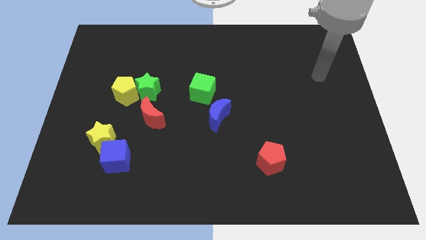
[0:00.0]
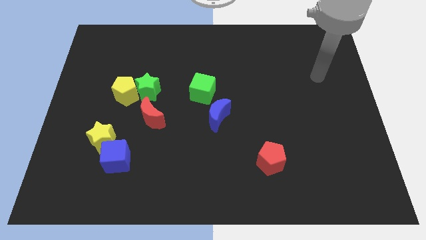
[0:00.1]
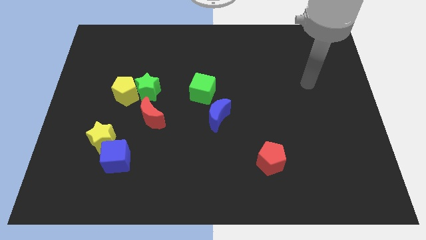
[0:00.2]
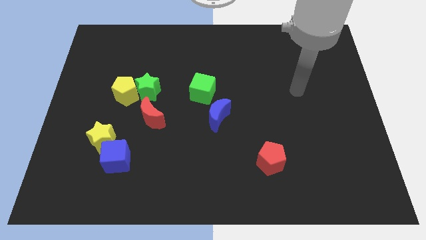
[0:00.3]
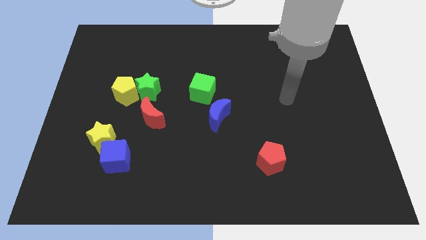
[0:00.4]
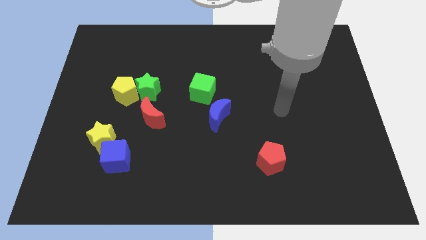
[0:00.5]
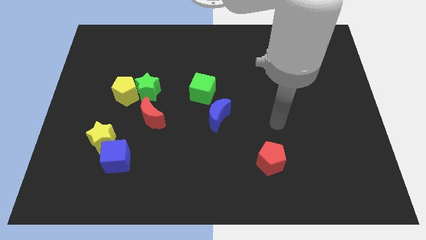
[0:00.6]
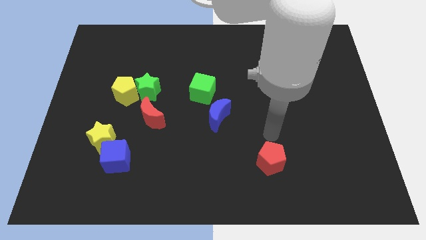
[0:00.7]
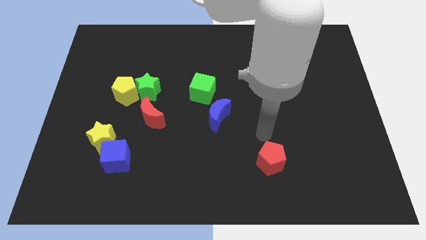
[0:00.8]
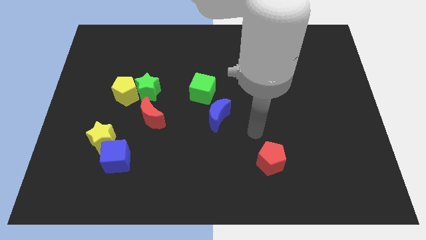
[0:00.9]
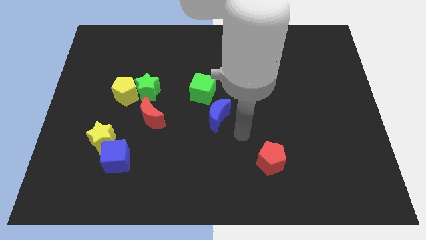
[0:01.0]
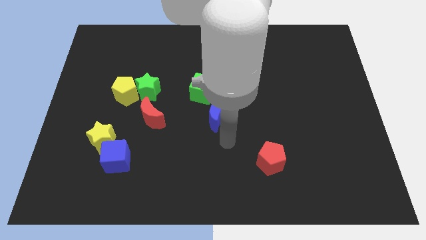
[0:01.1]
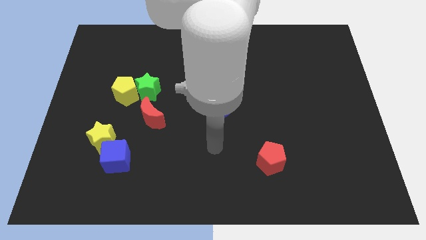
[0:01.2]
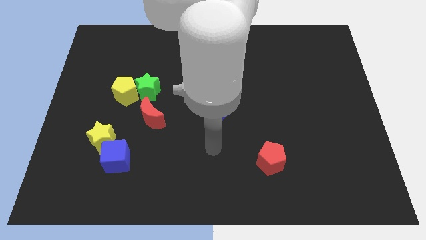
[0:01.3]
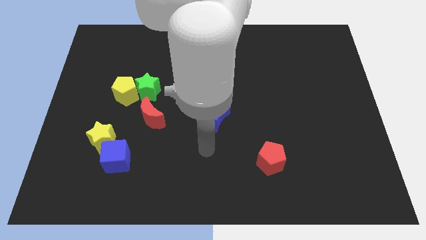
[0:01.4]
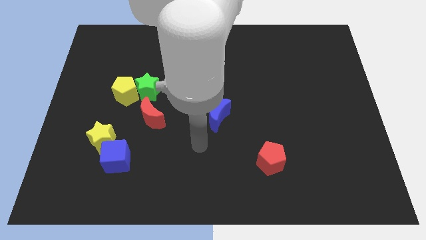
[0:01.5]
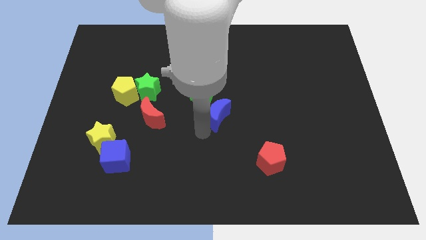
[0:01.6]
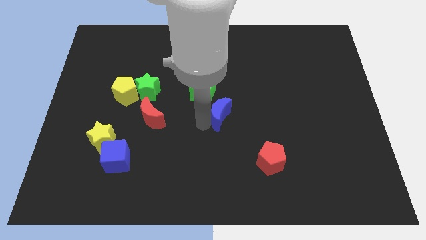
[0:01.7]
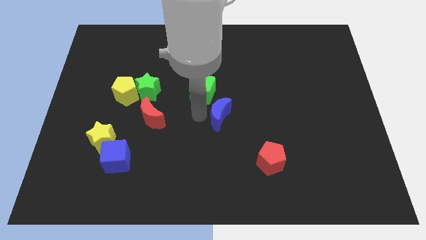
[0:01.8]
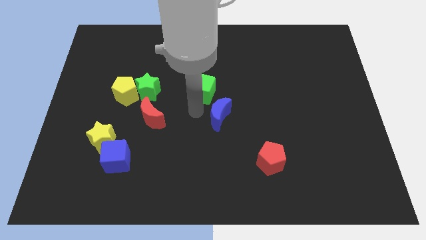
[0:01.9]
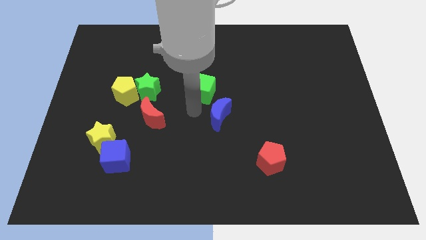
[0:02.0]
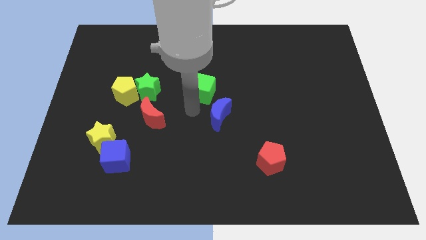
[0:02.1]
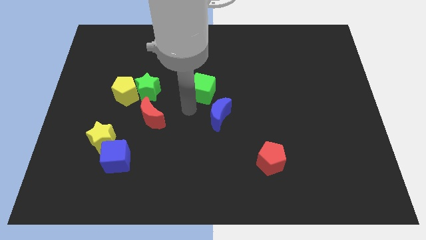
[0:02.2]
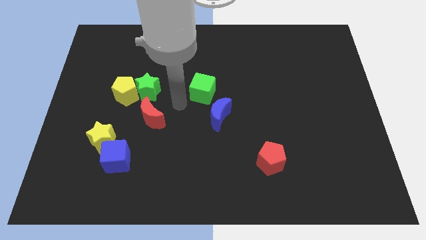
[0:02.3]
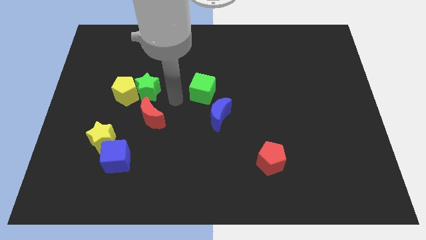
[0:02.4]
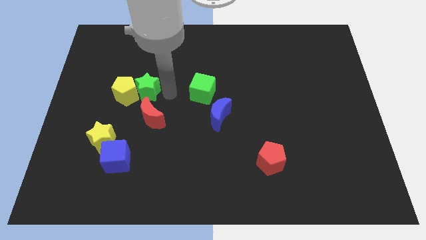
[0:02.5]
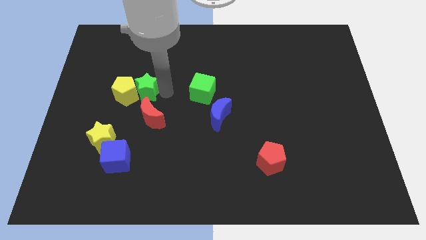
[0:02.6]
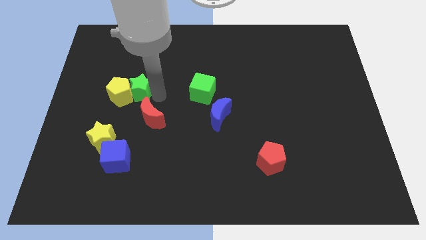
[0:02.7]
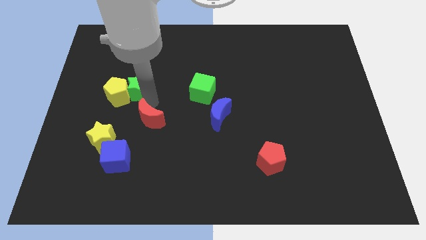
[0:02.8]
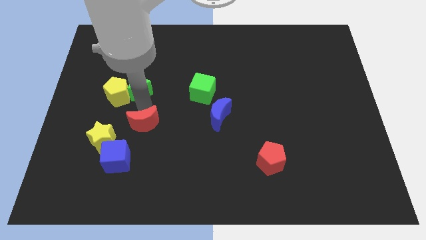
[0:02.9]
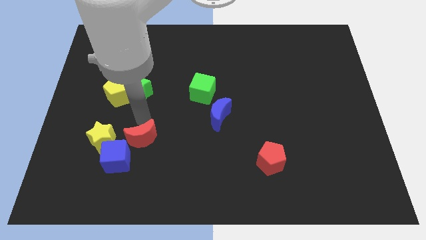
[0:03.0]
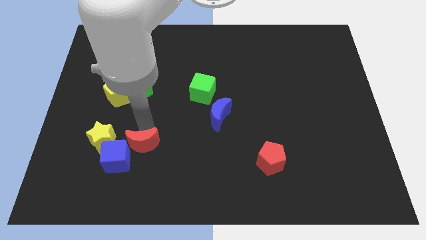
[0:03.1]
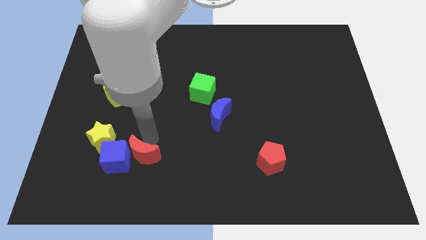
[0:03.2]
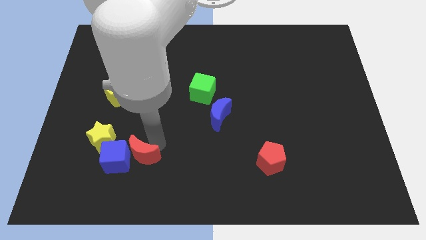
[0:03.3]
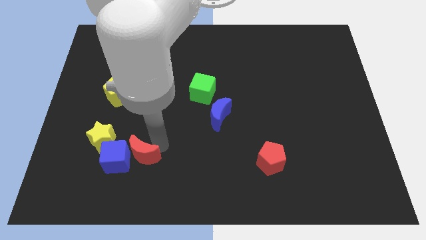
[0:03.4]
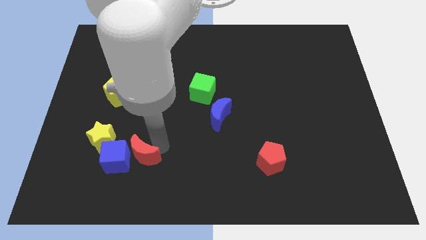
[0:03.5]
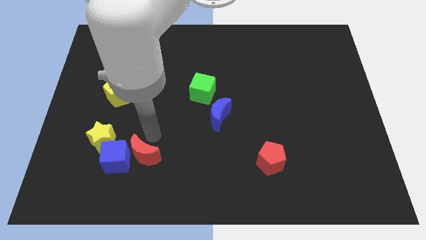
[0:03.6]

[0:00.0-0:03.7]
move red crescent close to the blue cube

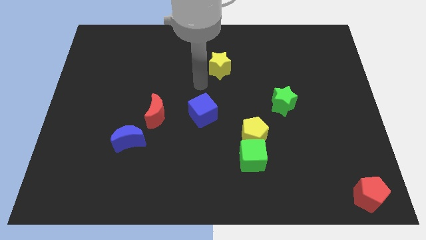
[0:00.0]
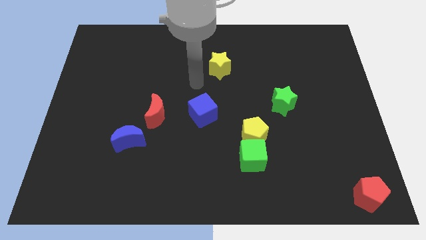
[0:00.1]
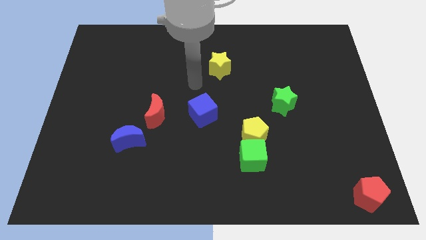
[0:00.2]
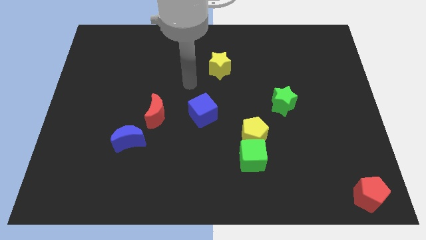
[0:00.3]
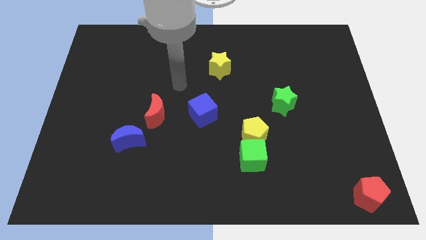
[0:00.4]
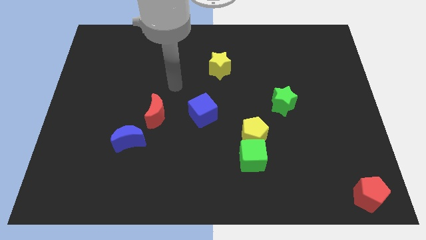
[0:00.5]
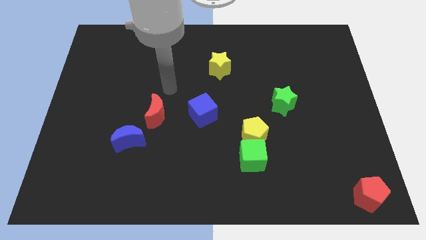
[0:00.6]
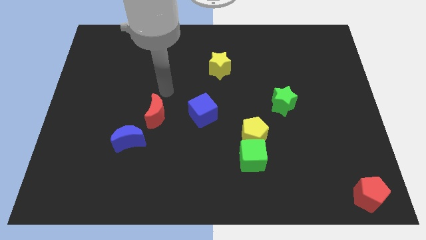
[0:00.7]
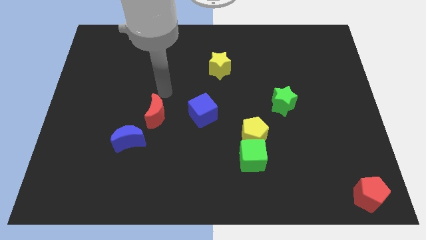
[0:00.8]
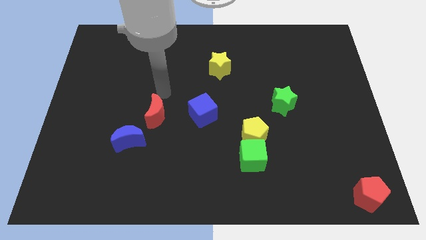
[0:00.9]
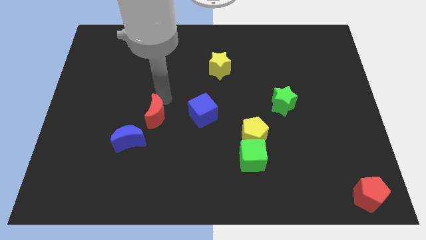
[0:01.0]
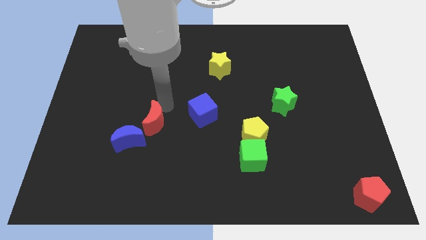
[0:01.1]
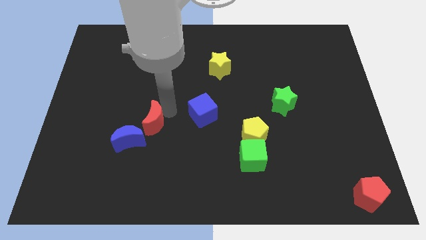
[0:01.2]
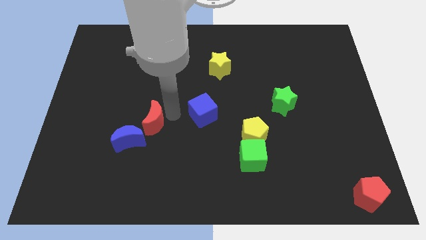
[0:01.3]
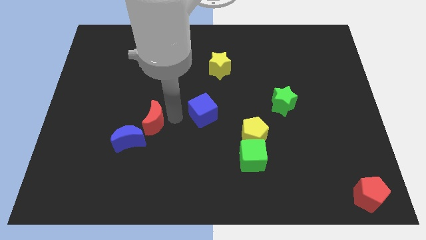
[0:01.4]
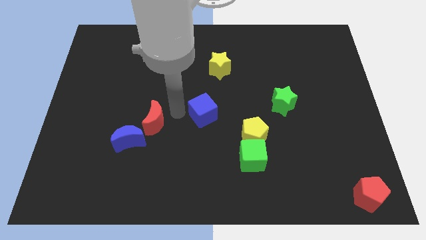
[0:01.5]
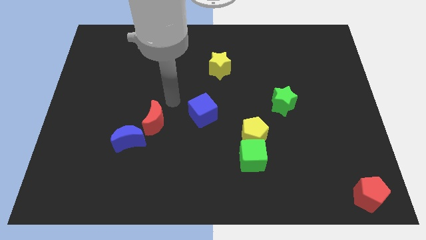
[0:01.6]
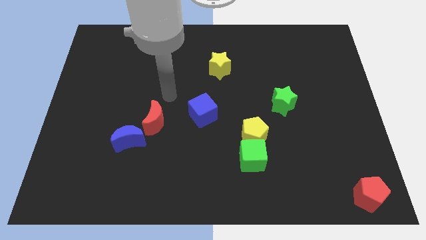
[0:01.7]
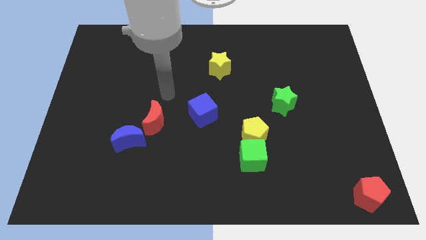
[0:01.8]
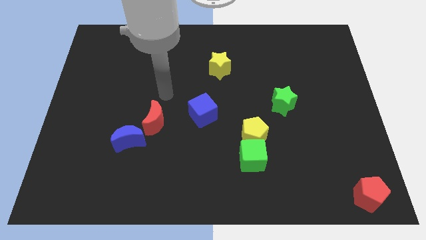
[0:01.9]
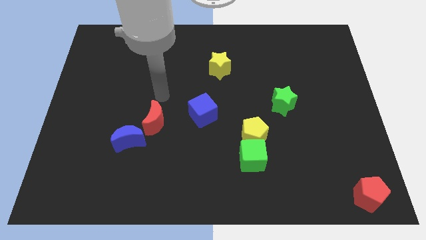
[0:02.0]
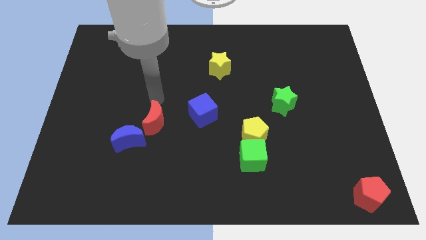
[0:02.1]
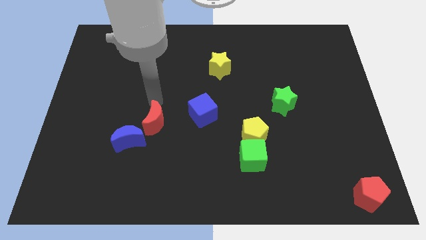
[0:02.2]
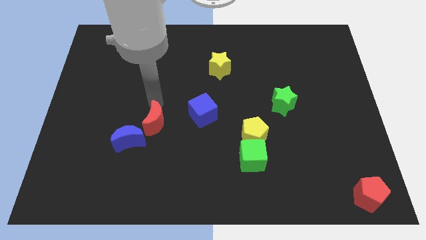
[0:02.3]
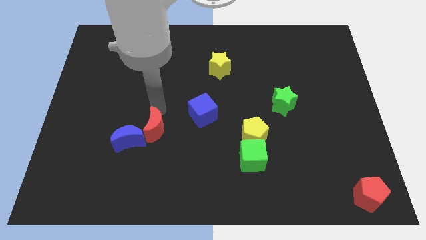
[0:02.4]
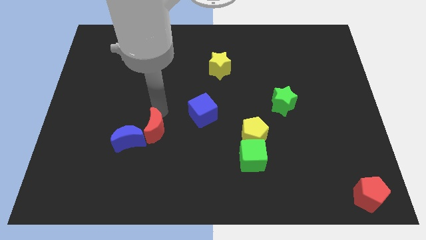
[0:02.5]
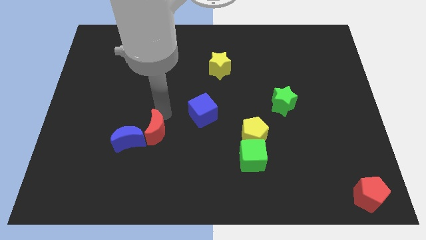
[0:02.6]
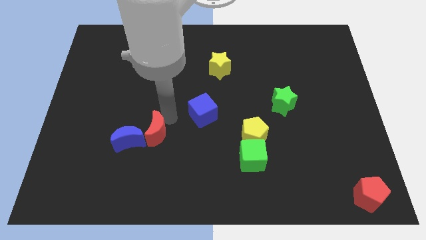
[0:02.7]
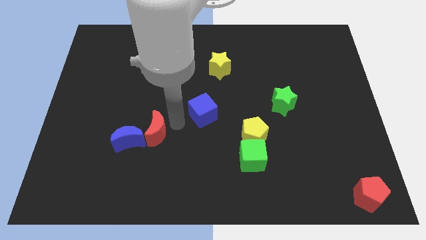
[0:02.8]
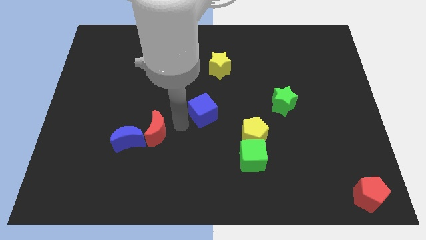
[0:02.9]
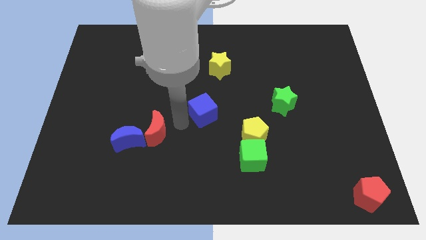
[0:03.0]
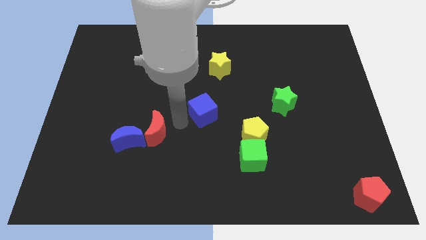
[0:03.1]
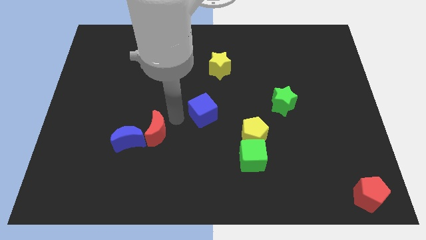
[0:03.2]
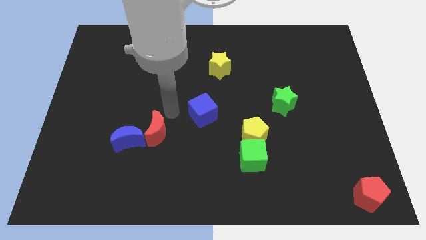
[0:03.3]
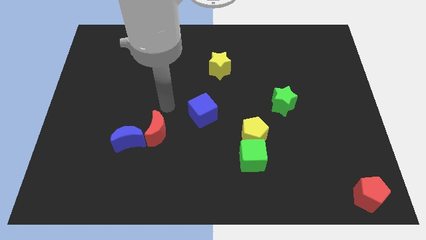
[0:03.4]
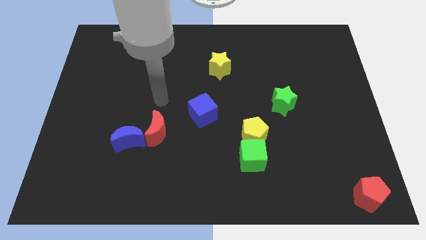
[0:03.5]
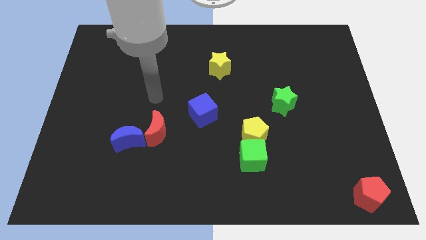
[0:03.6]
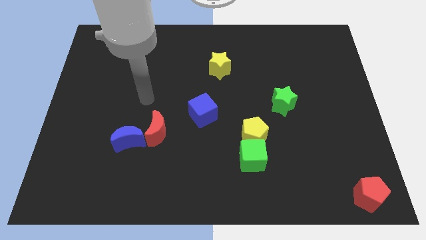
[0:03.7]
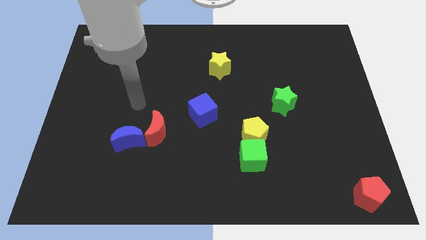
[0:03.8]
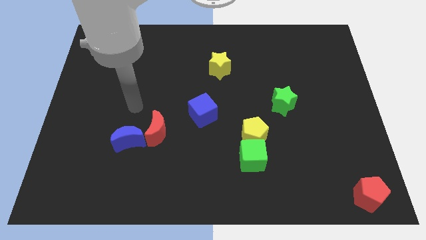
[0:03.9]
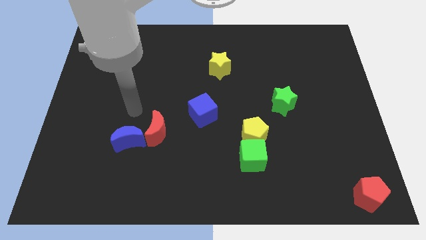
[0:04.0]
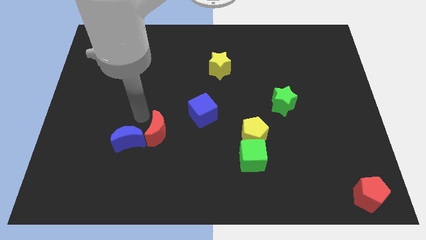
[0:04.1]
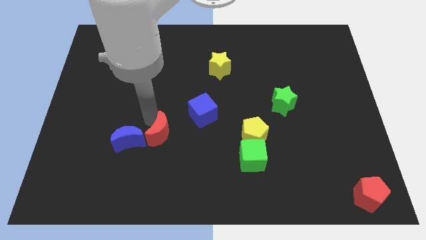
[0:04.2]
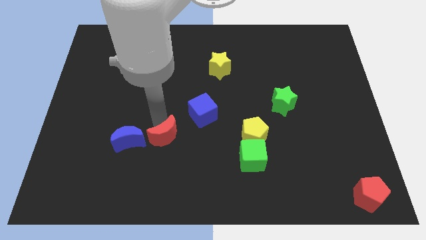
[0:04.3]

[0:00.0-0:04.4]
move red moon in between blue cube and blue moon

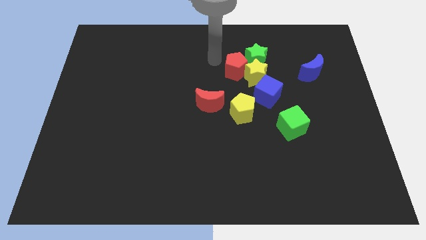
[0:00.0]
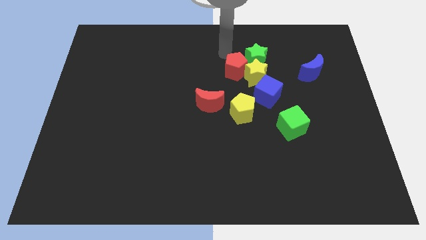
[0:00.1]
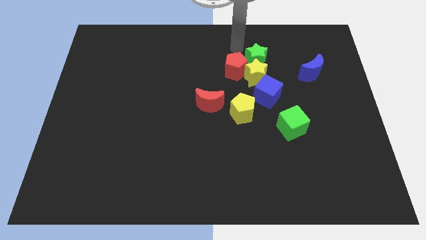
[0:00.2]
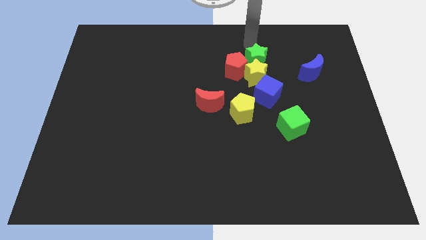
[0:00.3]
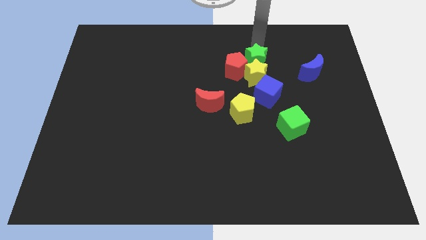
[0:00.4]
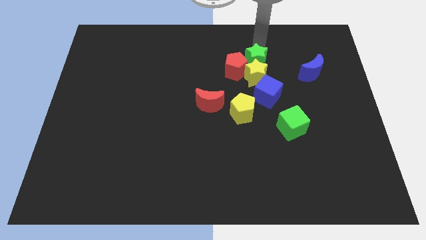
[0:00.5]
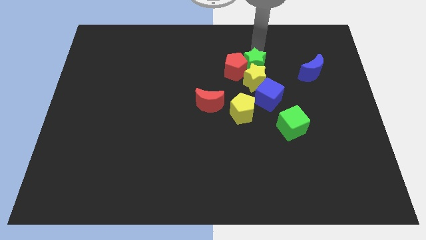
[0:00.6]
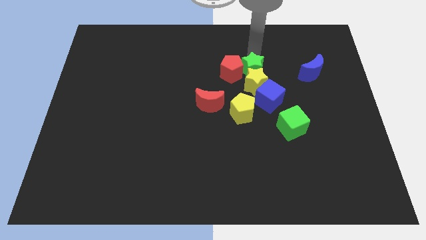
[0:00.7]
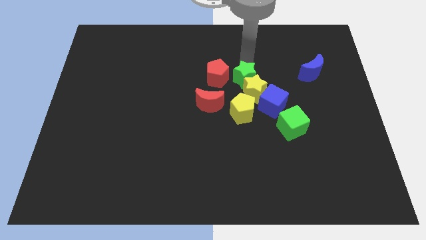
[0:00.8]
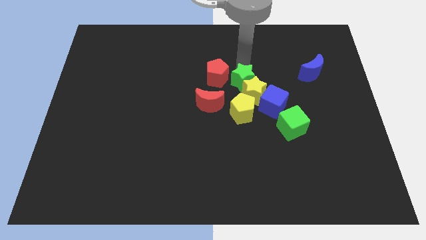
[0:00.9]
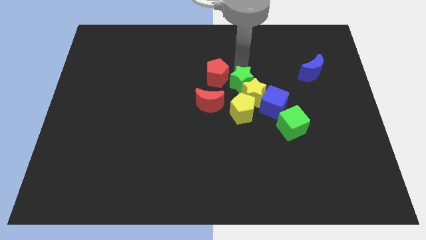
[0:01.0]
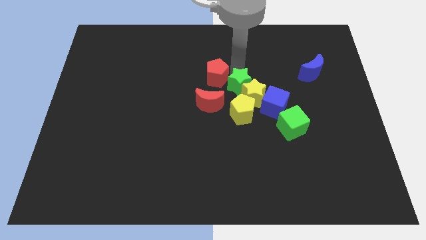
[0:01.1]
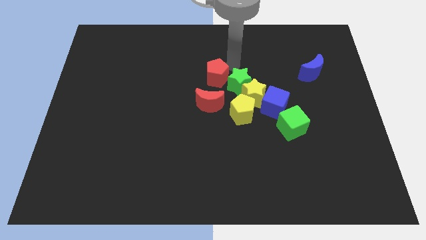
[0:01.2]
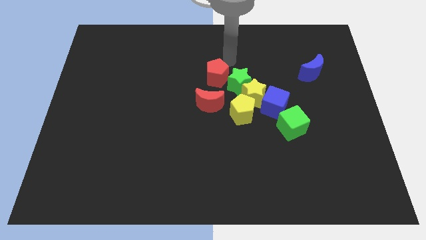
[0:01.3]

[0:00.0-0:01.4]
push the green star into yellow star
